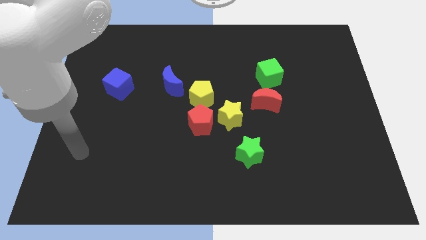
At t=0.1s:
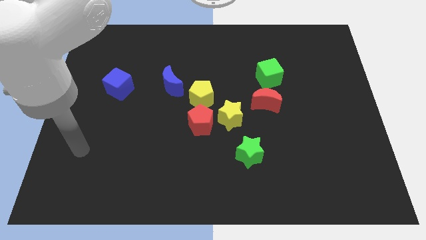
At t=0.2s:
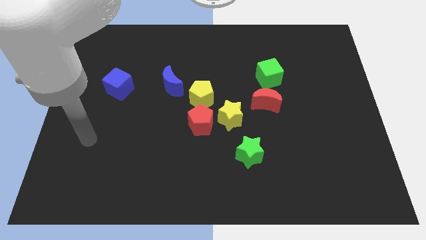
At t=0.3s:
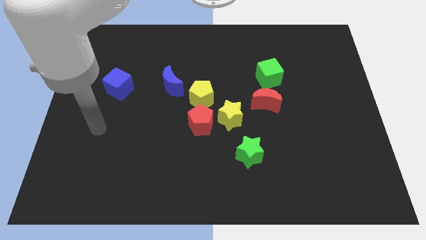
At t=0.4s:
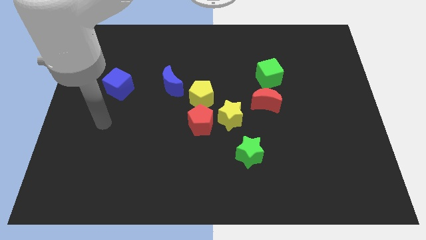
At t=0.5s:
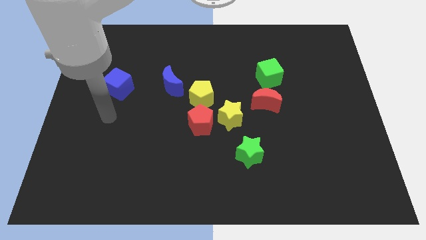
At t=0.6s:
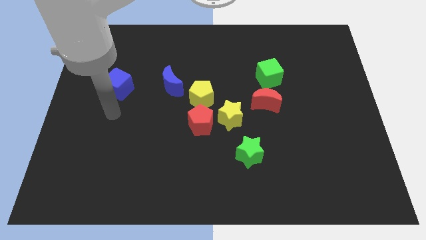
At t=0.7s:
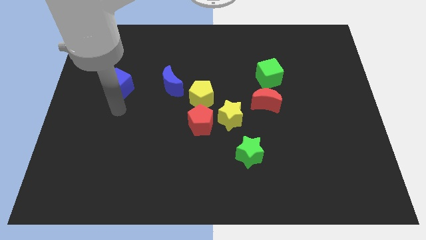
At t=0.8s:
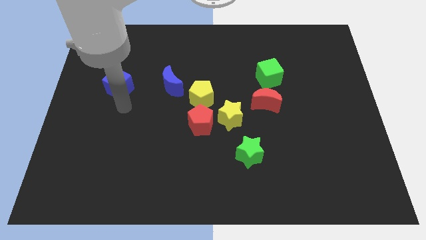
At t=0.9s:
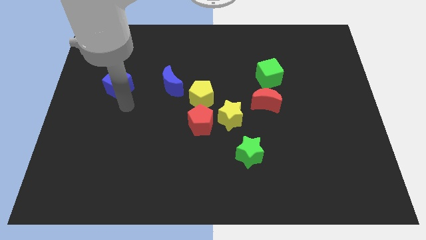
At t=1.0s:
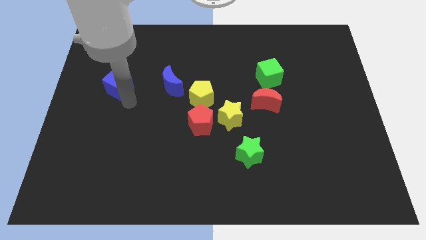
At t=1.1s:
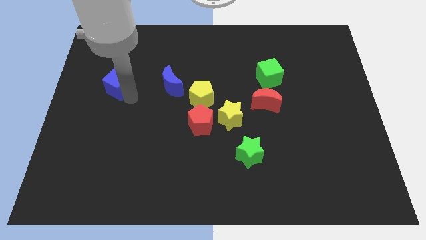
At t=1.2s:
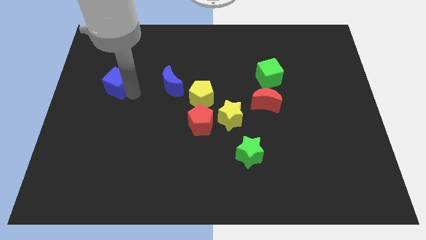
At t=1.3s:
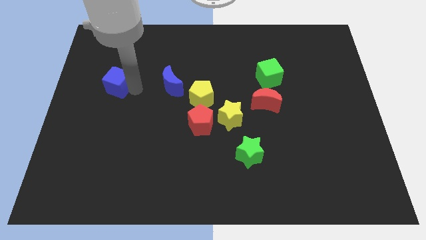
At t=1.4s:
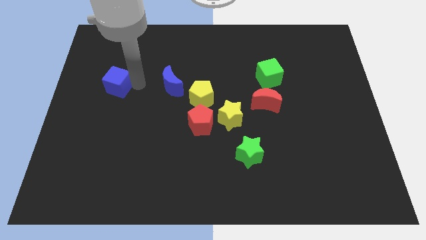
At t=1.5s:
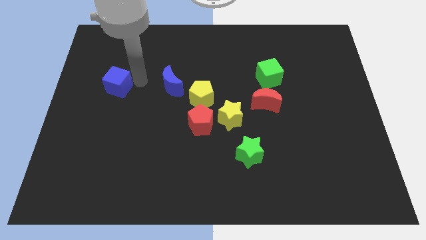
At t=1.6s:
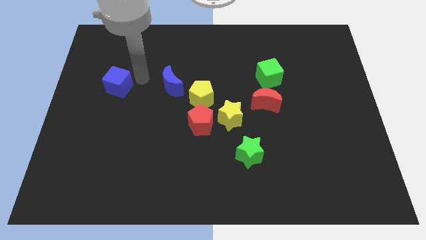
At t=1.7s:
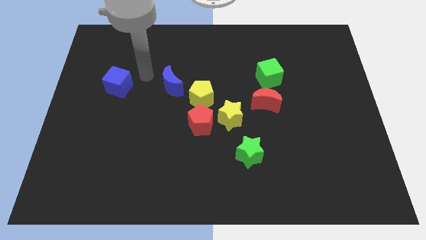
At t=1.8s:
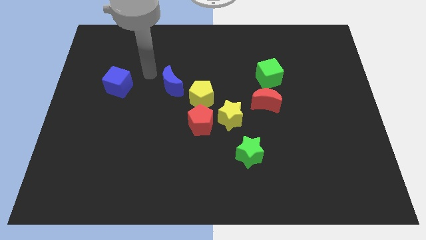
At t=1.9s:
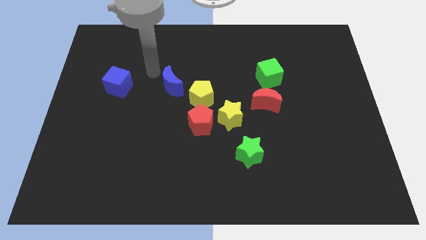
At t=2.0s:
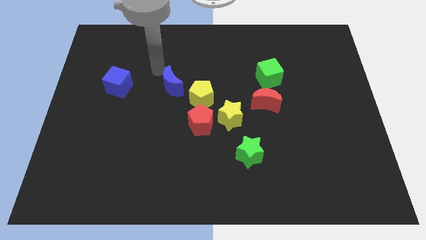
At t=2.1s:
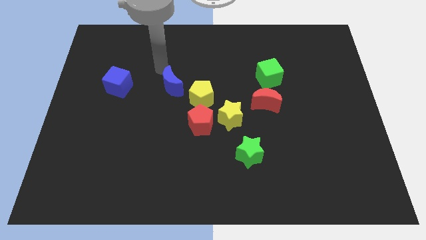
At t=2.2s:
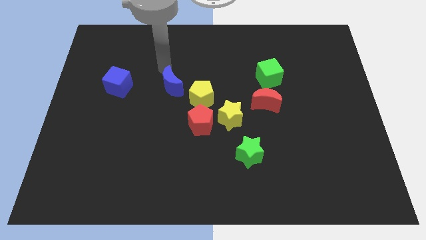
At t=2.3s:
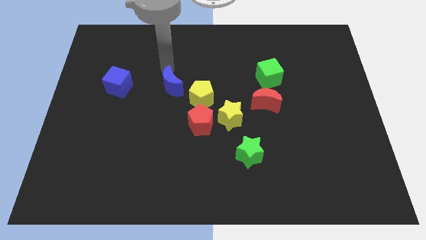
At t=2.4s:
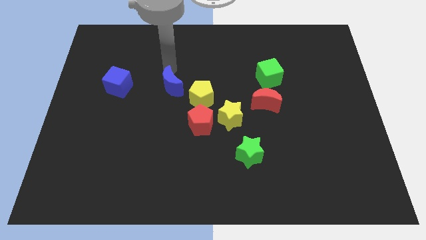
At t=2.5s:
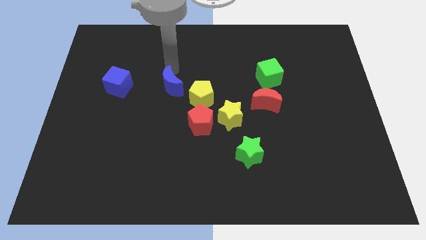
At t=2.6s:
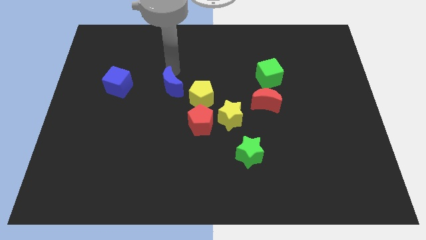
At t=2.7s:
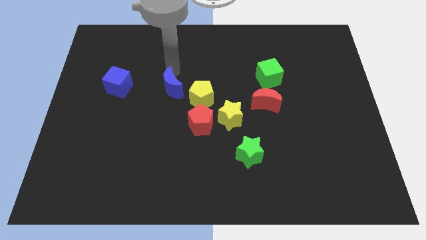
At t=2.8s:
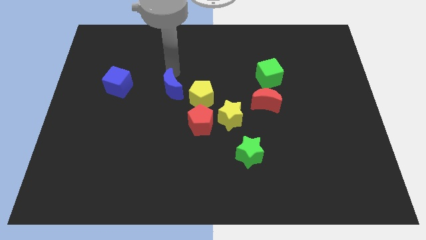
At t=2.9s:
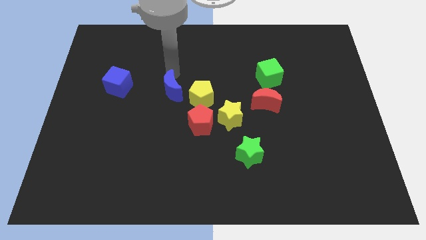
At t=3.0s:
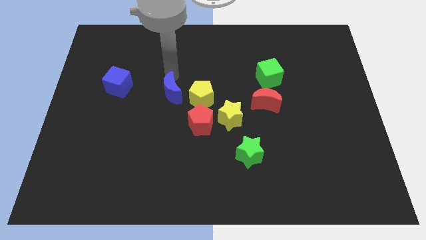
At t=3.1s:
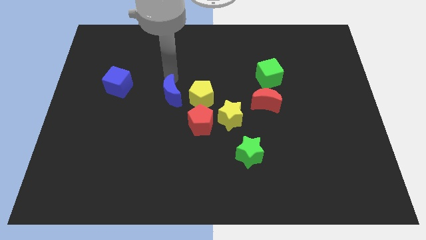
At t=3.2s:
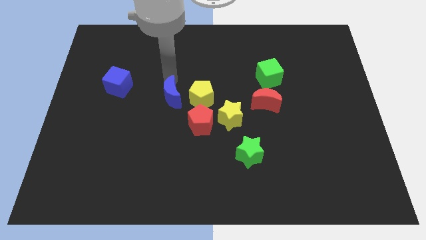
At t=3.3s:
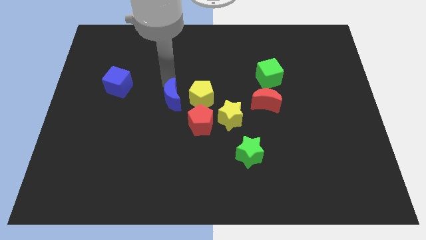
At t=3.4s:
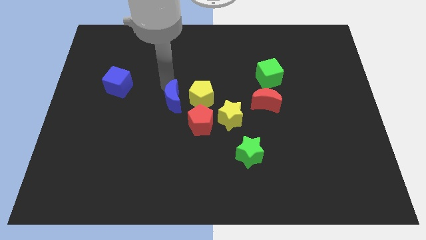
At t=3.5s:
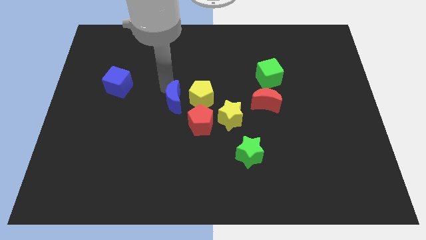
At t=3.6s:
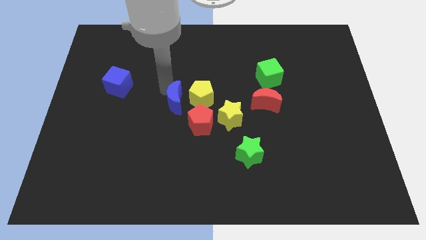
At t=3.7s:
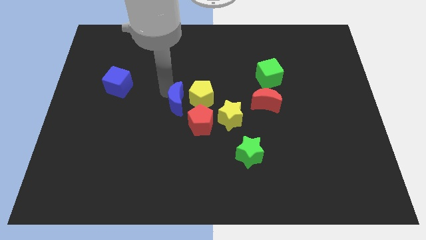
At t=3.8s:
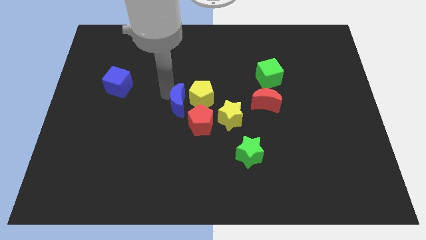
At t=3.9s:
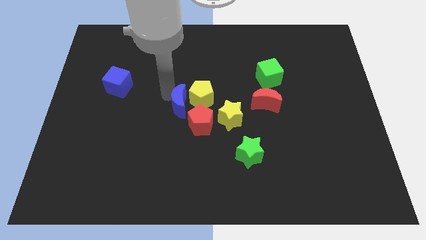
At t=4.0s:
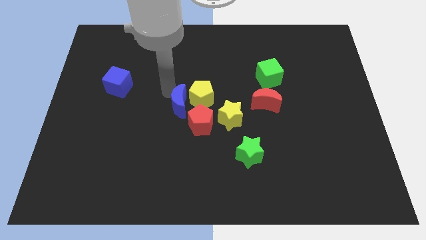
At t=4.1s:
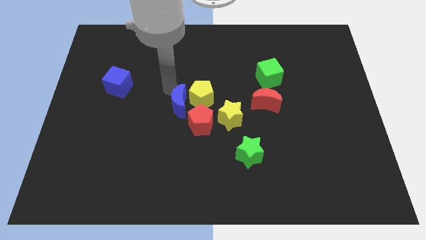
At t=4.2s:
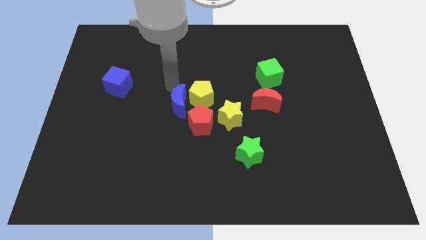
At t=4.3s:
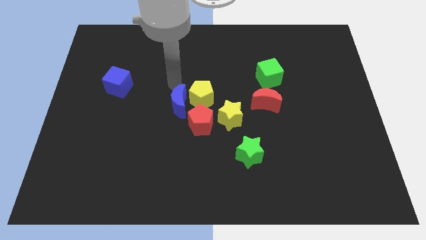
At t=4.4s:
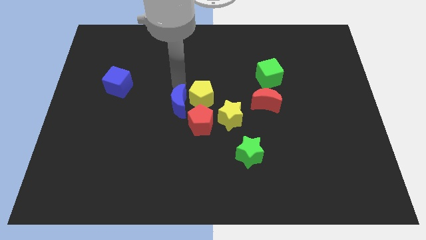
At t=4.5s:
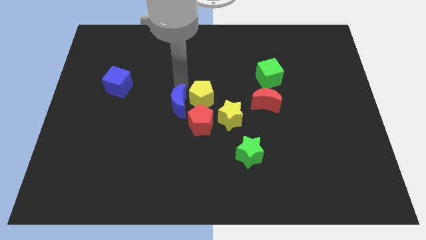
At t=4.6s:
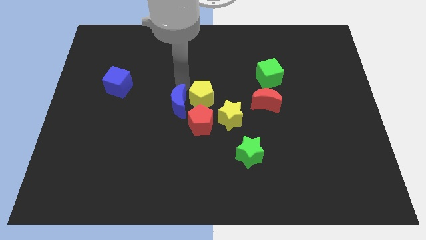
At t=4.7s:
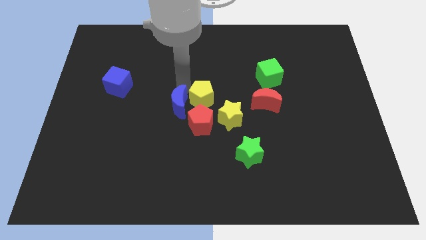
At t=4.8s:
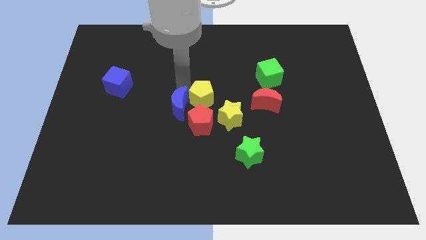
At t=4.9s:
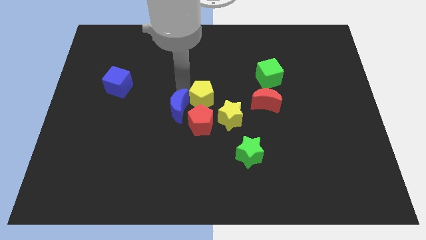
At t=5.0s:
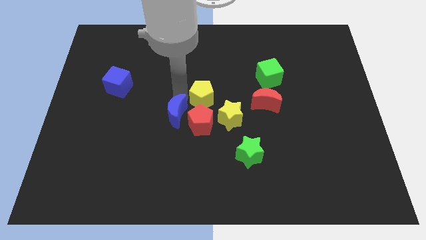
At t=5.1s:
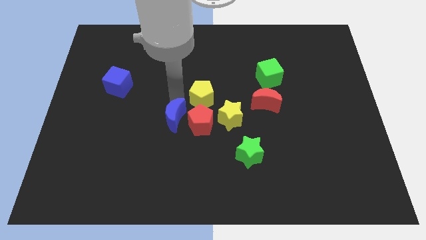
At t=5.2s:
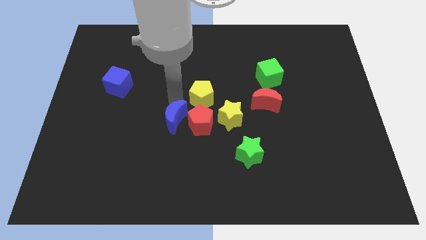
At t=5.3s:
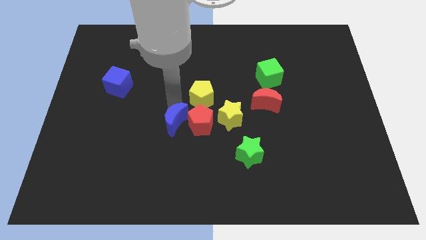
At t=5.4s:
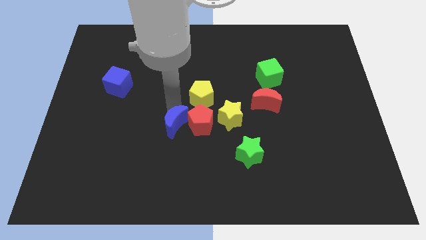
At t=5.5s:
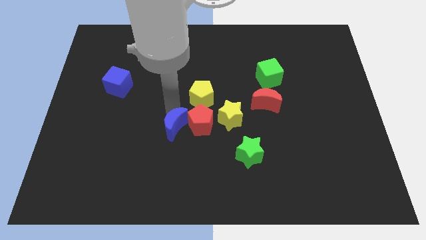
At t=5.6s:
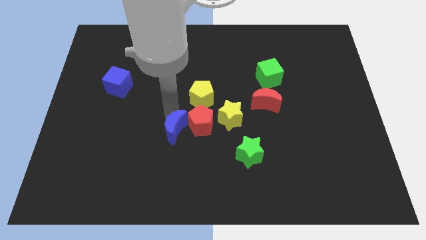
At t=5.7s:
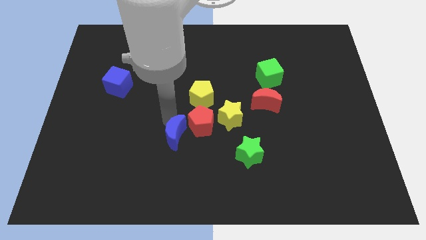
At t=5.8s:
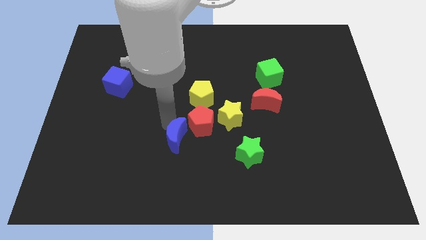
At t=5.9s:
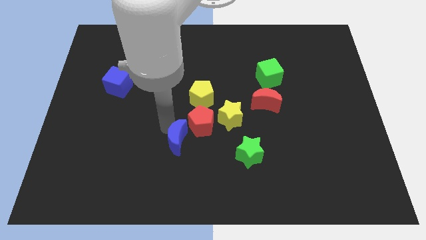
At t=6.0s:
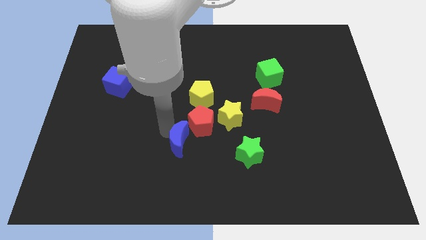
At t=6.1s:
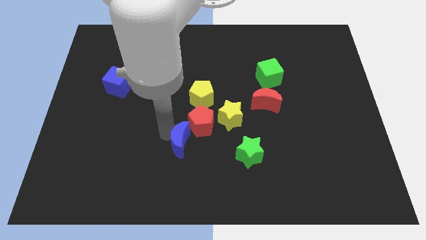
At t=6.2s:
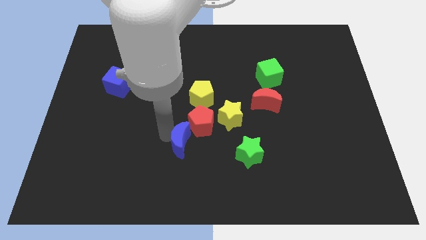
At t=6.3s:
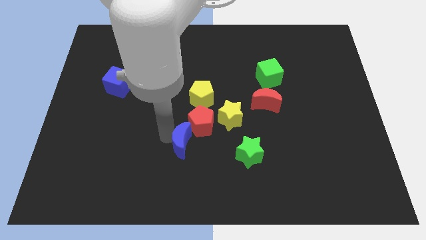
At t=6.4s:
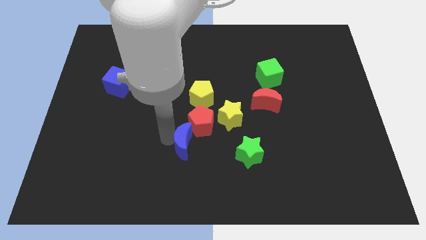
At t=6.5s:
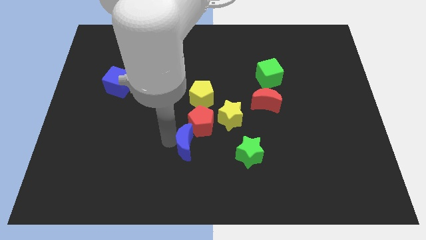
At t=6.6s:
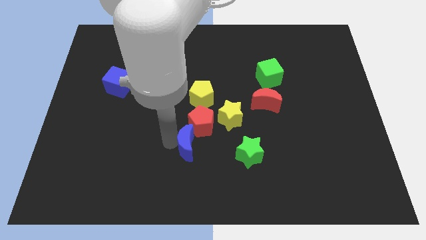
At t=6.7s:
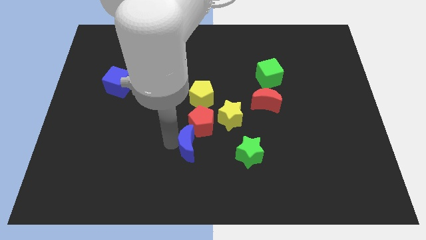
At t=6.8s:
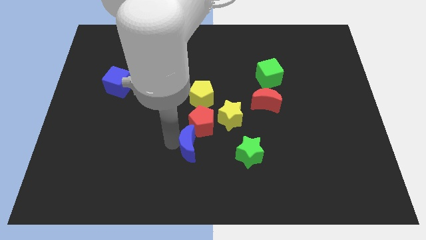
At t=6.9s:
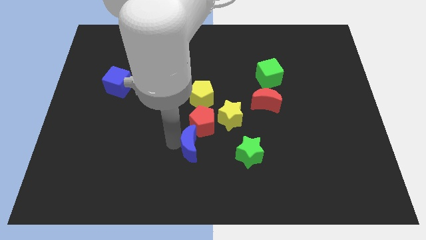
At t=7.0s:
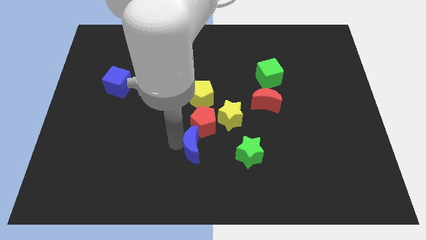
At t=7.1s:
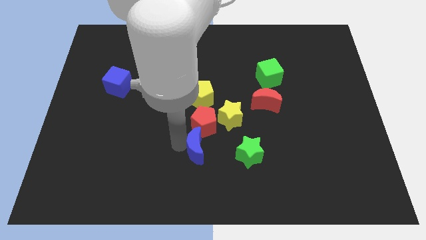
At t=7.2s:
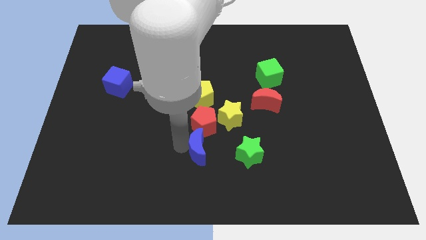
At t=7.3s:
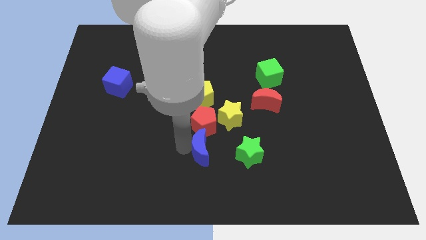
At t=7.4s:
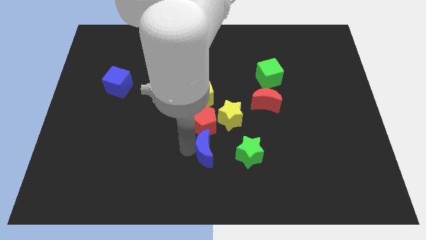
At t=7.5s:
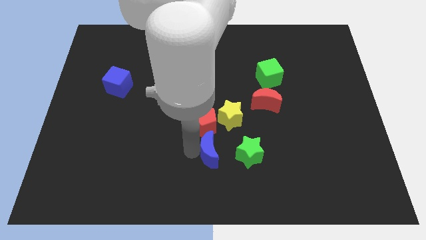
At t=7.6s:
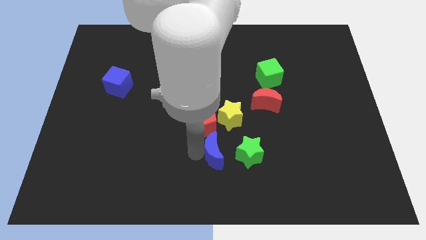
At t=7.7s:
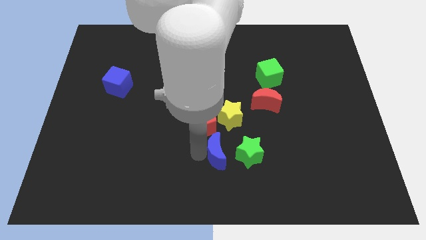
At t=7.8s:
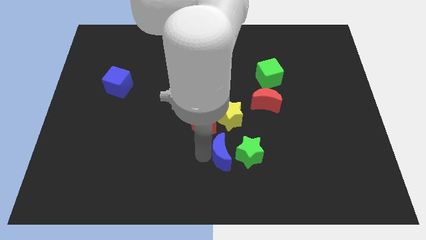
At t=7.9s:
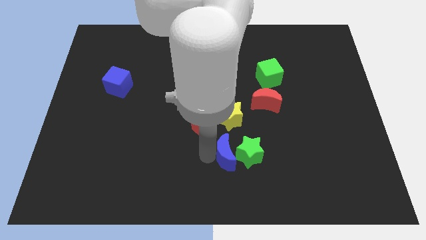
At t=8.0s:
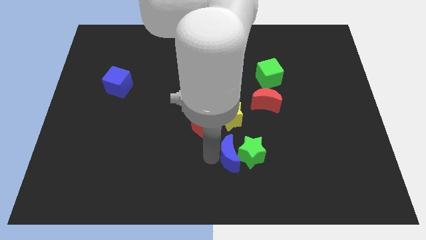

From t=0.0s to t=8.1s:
push the blue moon to the green star
